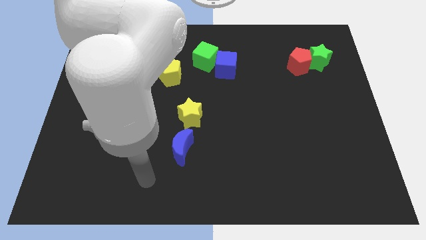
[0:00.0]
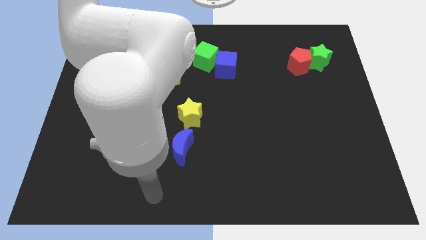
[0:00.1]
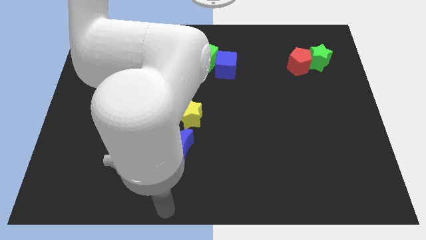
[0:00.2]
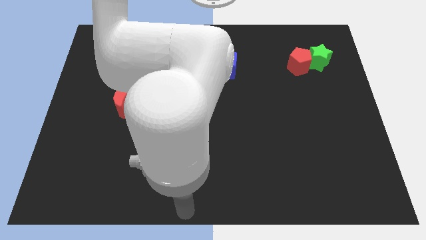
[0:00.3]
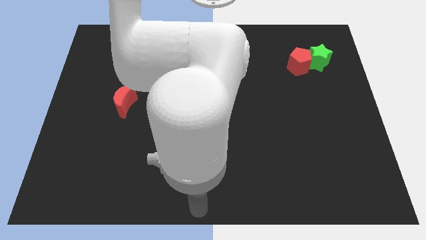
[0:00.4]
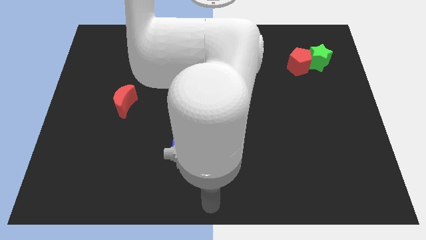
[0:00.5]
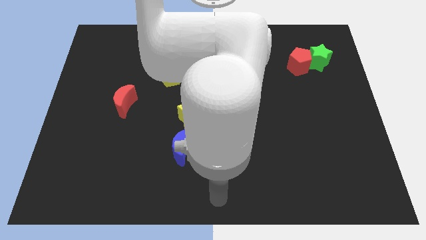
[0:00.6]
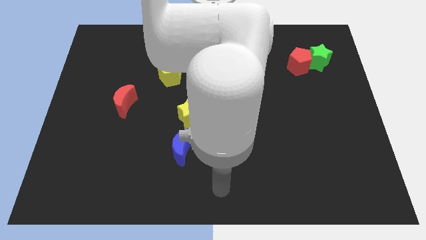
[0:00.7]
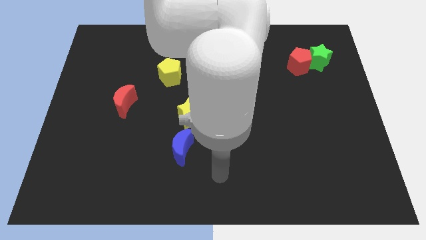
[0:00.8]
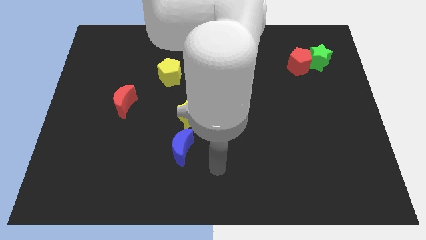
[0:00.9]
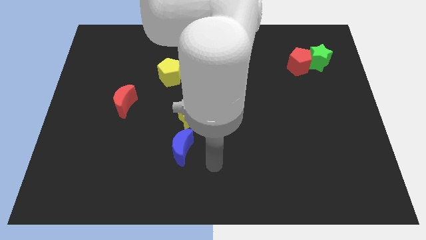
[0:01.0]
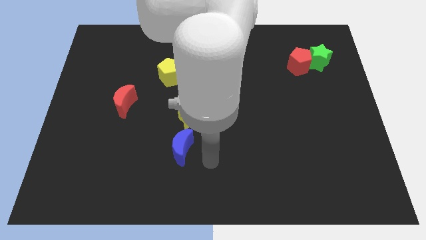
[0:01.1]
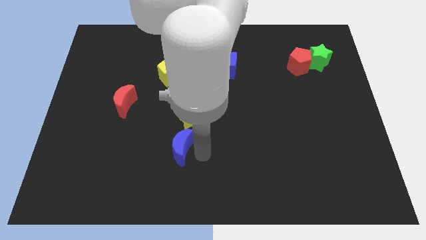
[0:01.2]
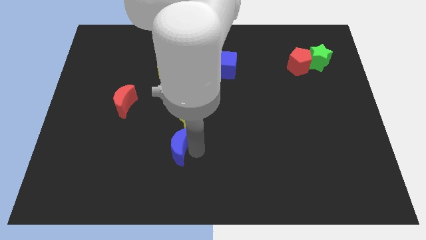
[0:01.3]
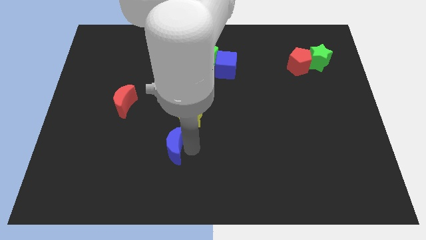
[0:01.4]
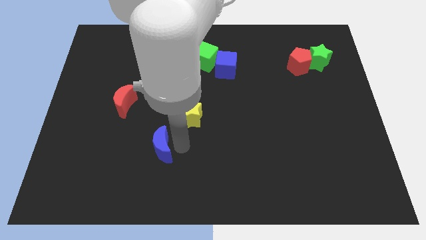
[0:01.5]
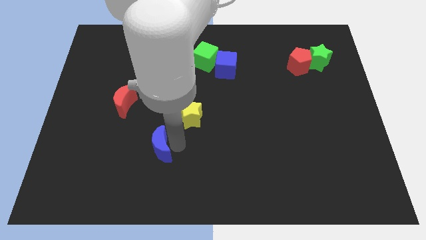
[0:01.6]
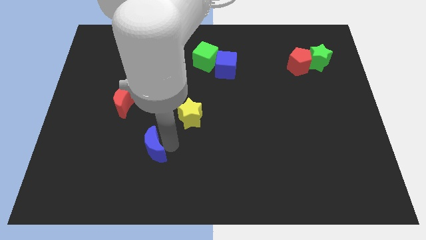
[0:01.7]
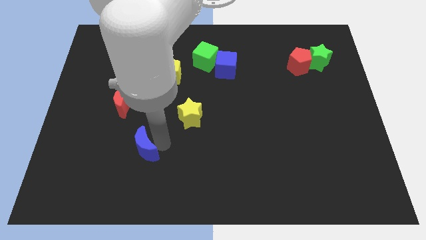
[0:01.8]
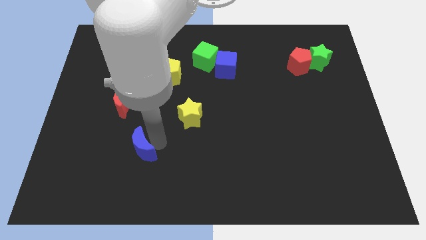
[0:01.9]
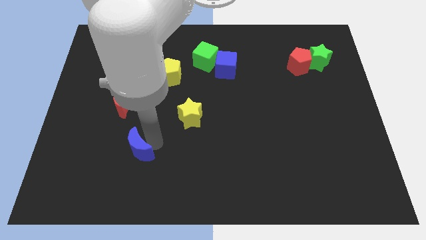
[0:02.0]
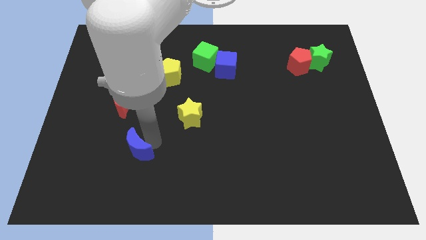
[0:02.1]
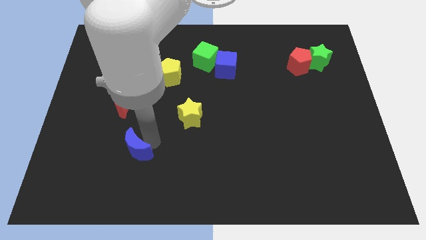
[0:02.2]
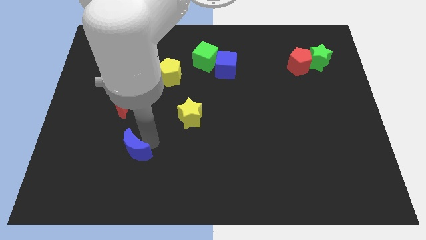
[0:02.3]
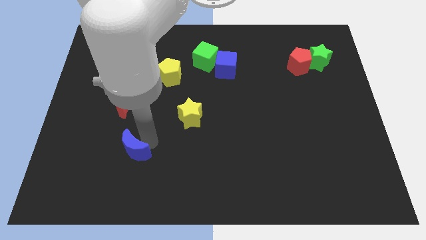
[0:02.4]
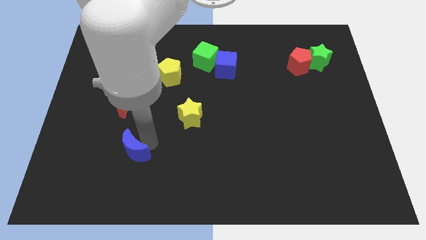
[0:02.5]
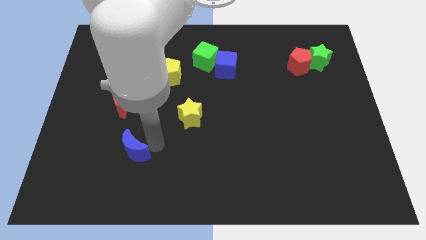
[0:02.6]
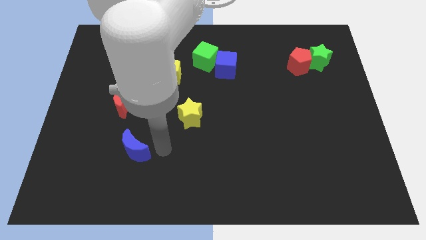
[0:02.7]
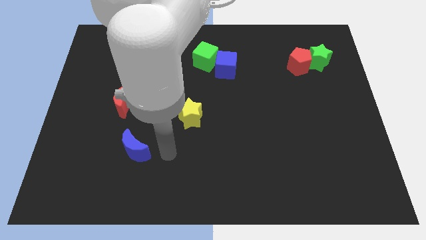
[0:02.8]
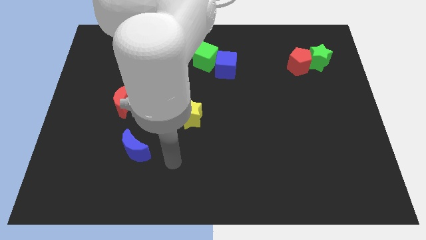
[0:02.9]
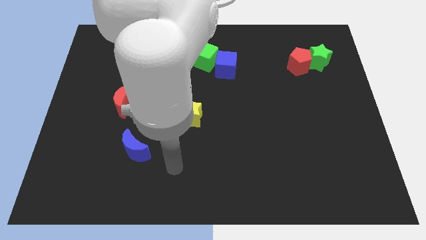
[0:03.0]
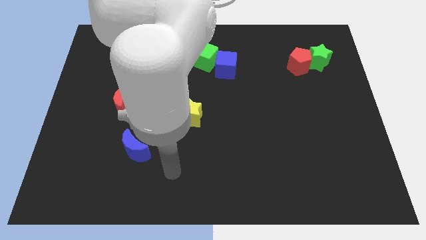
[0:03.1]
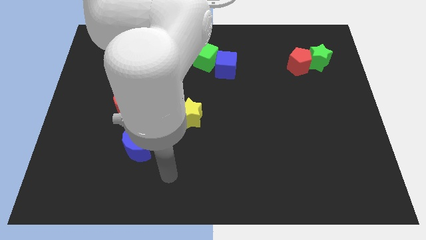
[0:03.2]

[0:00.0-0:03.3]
push the blue moon to the bottom side of the red moon

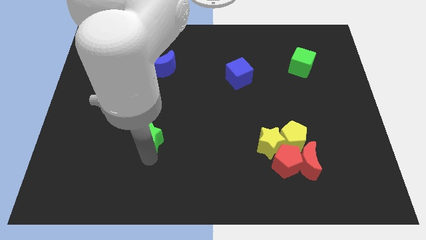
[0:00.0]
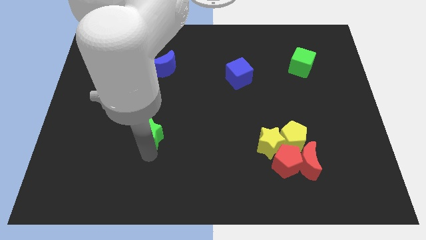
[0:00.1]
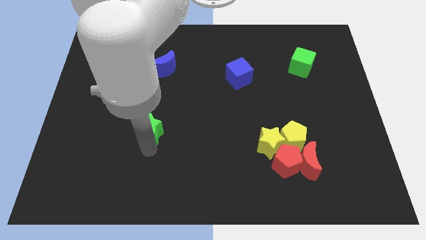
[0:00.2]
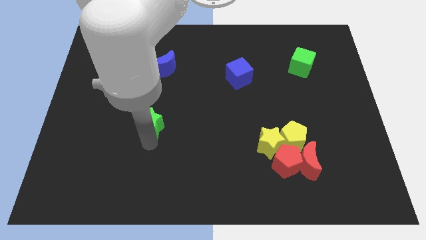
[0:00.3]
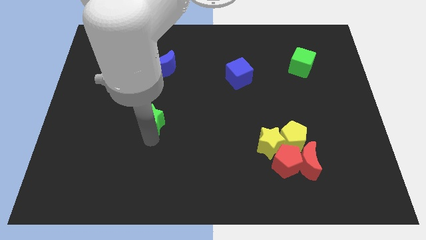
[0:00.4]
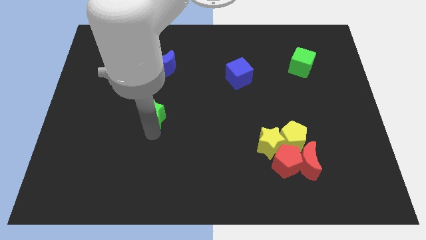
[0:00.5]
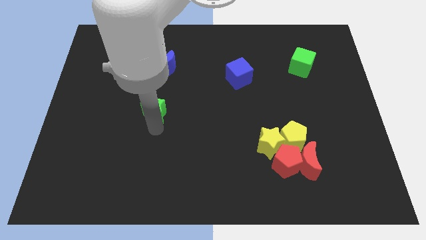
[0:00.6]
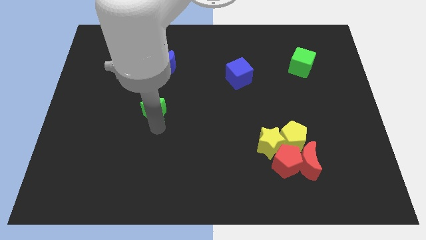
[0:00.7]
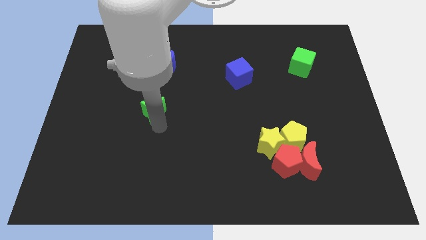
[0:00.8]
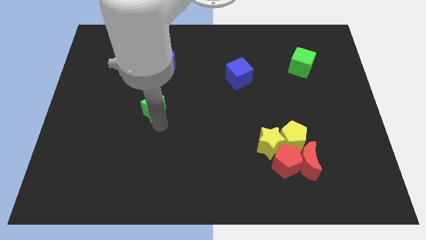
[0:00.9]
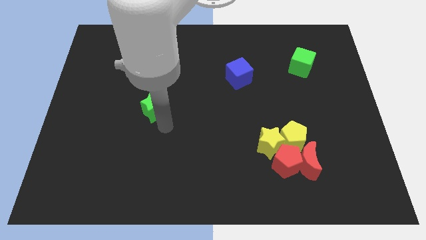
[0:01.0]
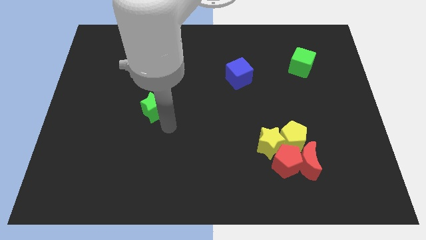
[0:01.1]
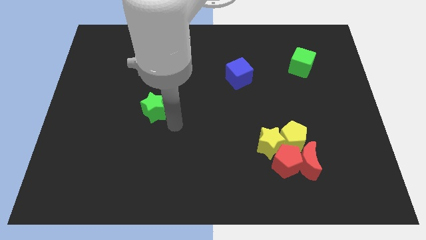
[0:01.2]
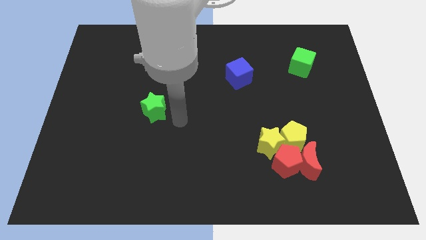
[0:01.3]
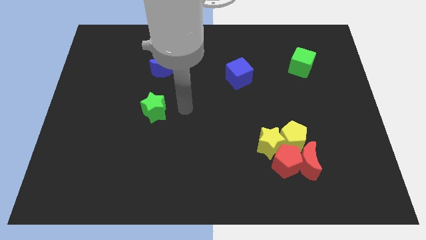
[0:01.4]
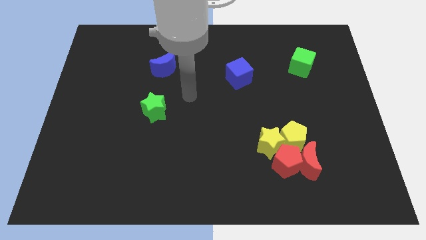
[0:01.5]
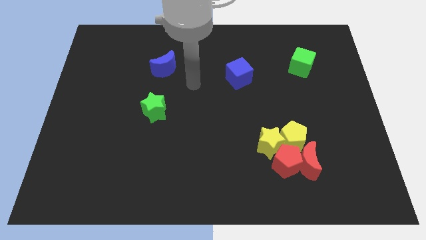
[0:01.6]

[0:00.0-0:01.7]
move the green star towards the bottom side of the blue crescent

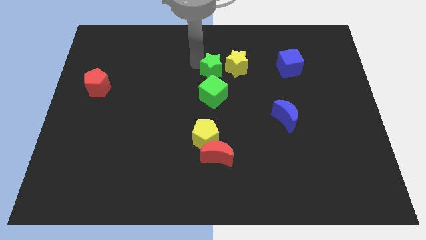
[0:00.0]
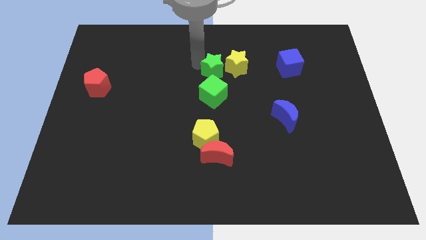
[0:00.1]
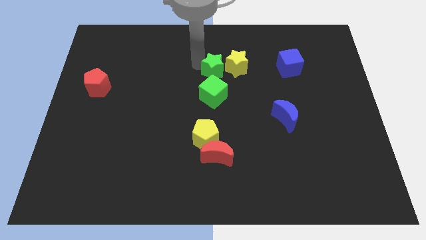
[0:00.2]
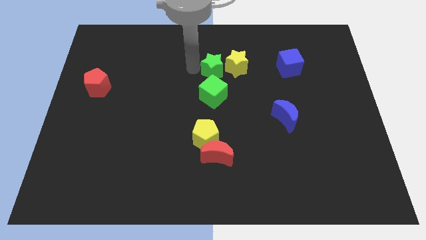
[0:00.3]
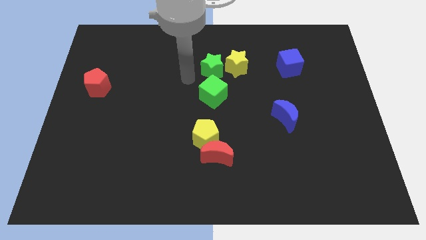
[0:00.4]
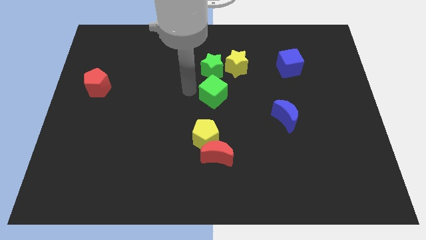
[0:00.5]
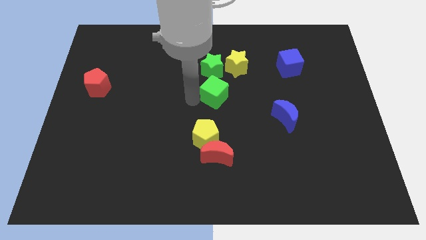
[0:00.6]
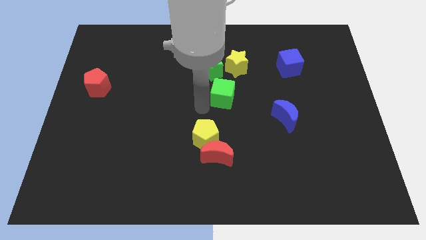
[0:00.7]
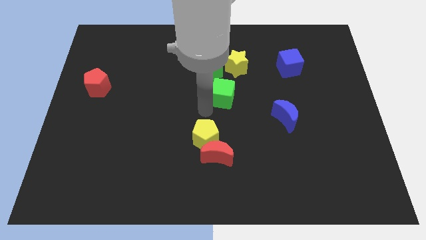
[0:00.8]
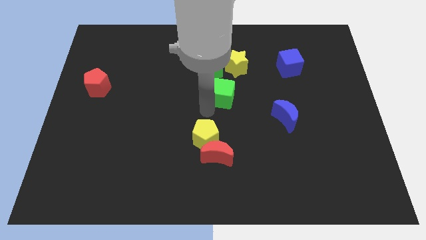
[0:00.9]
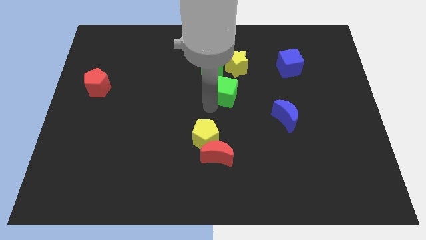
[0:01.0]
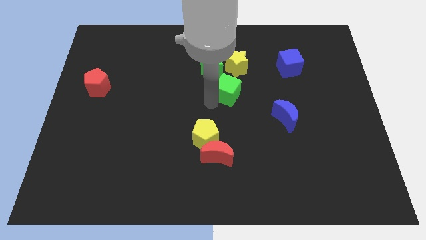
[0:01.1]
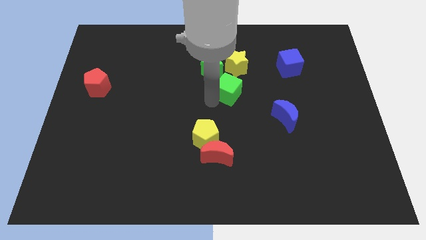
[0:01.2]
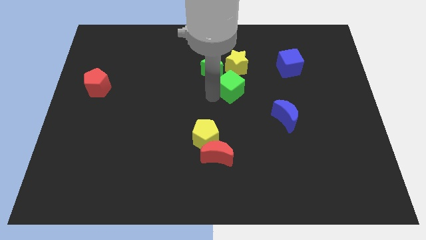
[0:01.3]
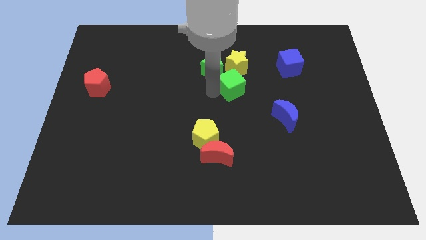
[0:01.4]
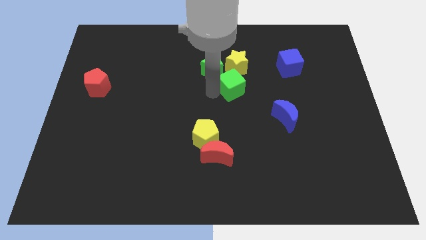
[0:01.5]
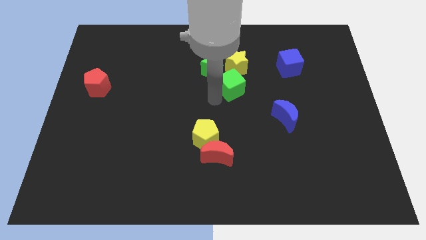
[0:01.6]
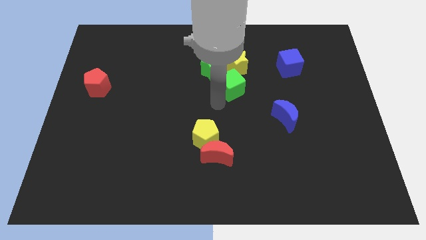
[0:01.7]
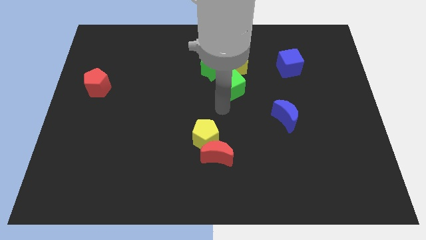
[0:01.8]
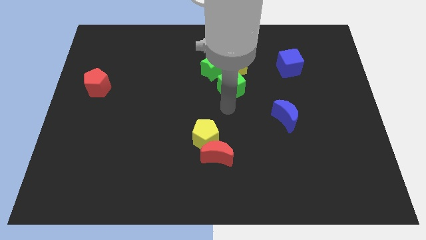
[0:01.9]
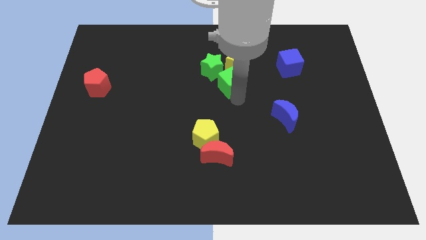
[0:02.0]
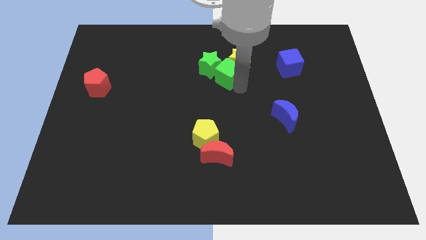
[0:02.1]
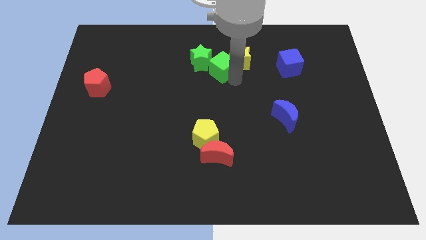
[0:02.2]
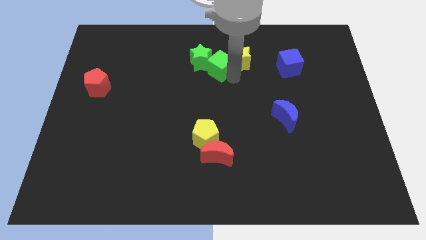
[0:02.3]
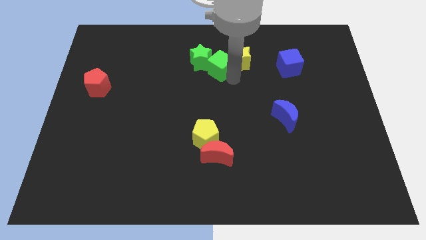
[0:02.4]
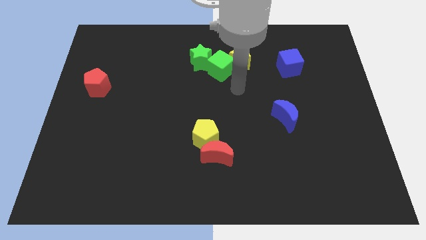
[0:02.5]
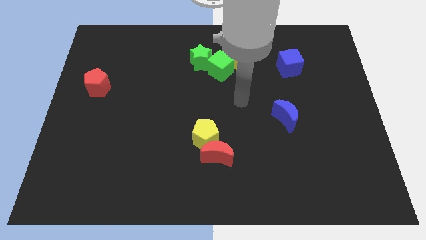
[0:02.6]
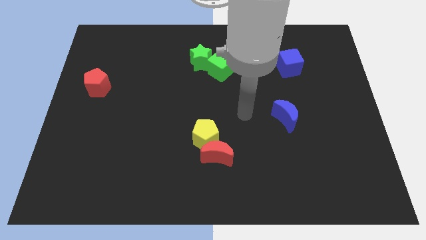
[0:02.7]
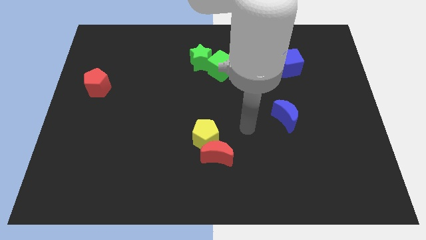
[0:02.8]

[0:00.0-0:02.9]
push the green blocks and yellow star towards the top side of the board

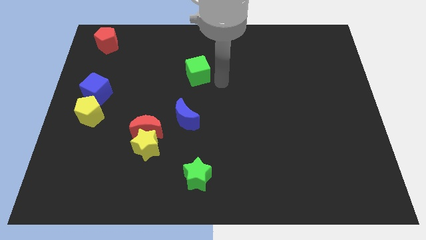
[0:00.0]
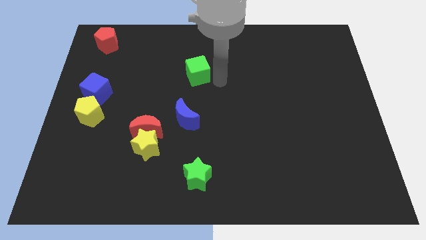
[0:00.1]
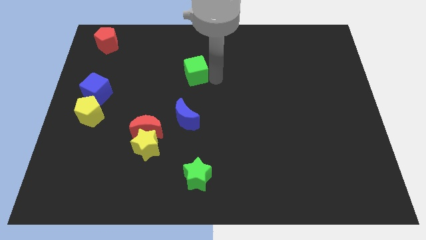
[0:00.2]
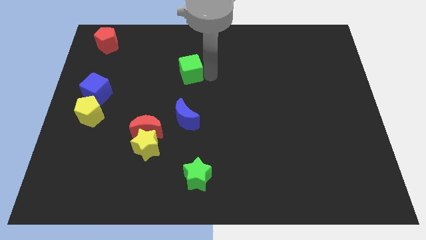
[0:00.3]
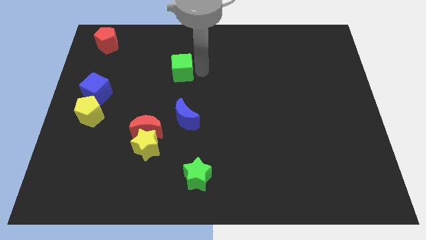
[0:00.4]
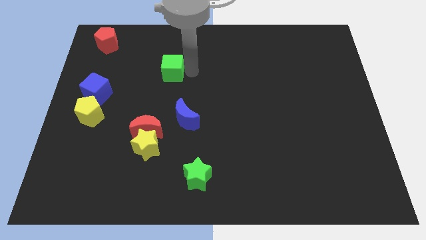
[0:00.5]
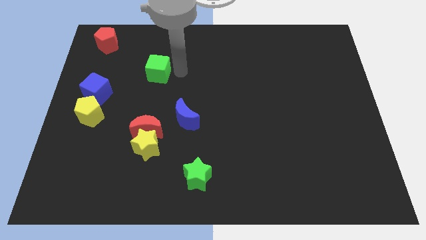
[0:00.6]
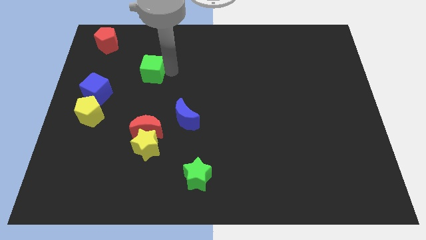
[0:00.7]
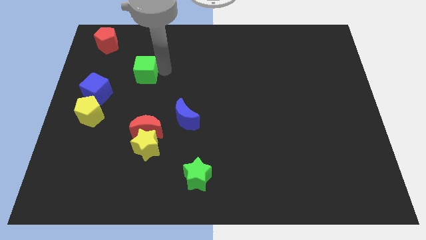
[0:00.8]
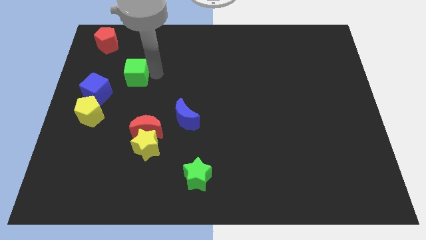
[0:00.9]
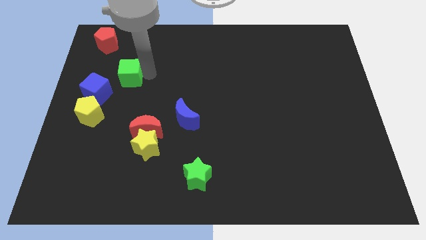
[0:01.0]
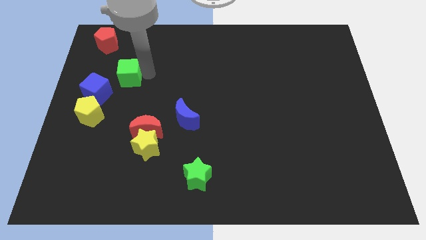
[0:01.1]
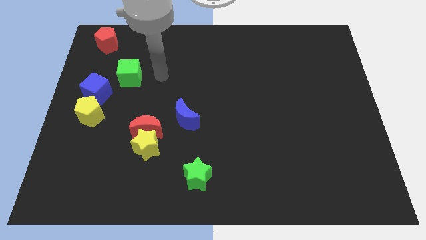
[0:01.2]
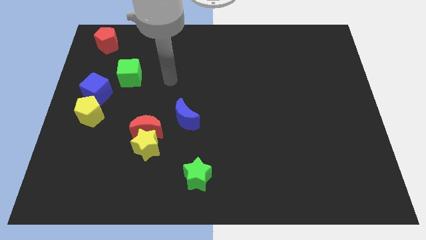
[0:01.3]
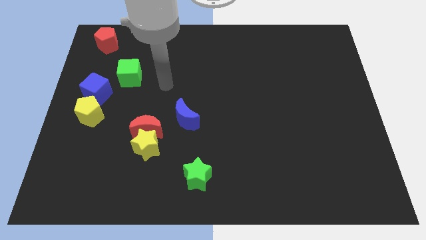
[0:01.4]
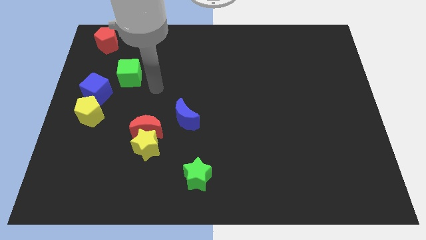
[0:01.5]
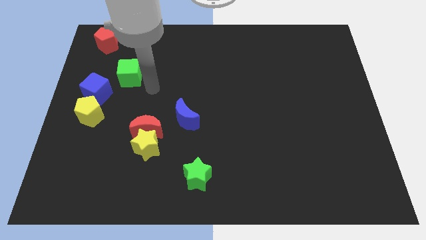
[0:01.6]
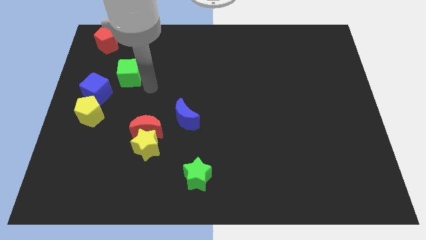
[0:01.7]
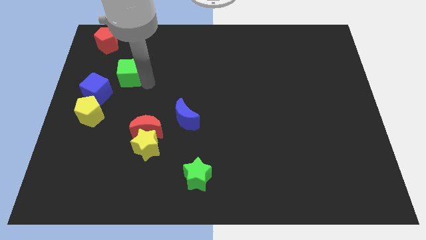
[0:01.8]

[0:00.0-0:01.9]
slide the green cube towards the left side
